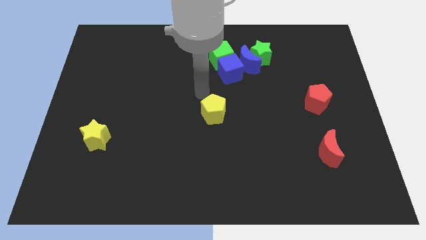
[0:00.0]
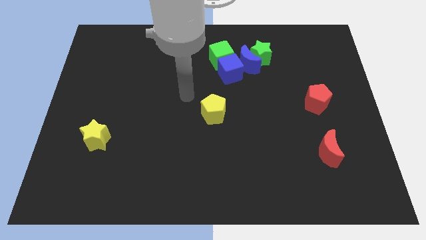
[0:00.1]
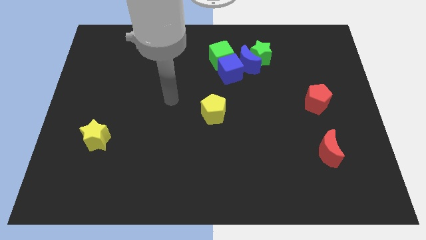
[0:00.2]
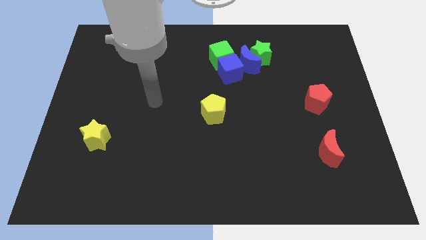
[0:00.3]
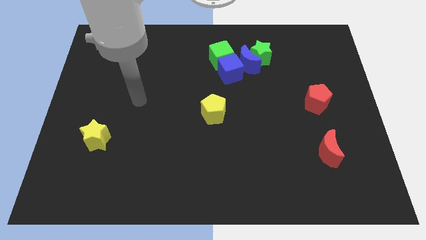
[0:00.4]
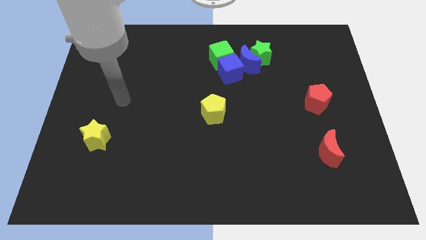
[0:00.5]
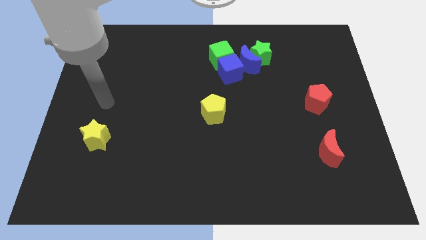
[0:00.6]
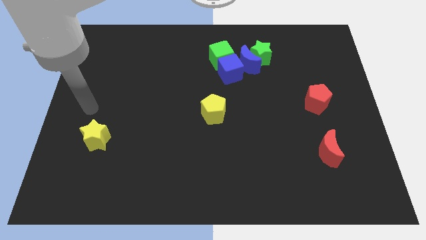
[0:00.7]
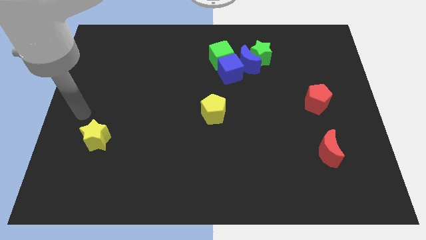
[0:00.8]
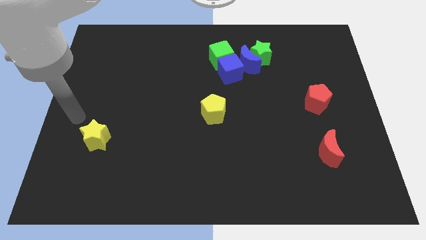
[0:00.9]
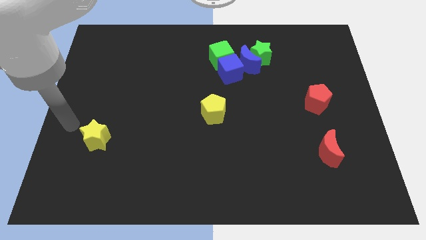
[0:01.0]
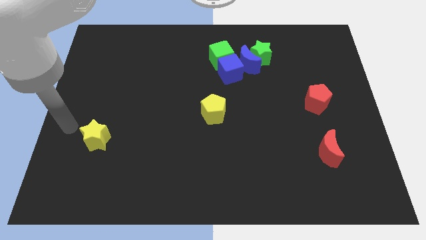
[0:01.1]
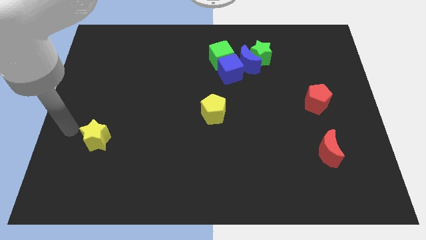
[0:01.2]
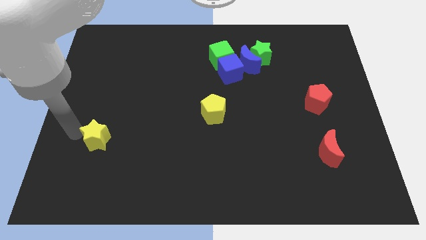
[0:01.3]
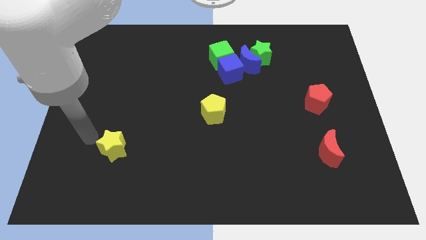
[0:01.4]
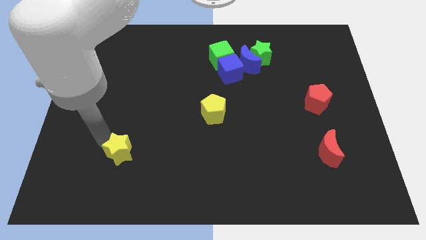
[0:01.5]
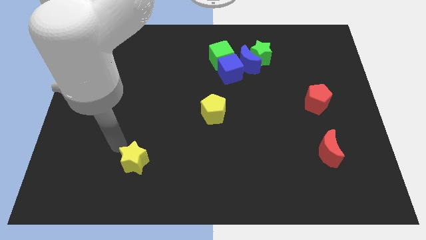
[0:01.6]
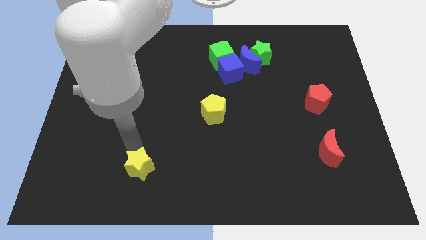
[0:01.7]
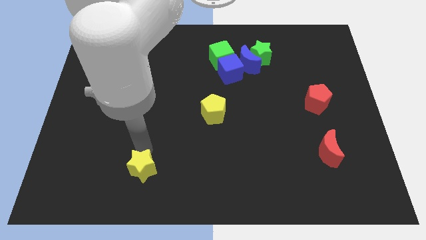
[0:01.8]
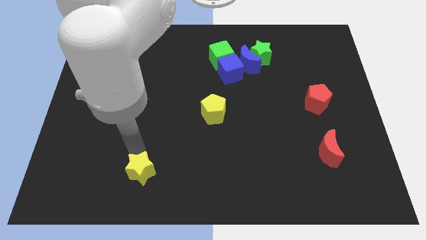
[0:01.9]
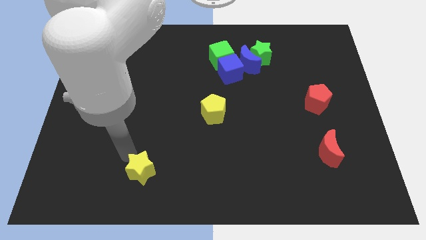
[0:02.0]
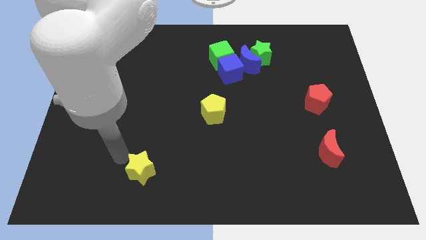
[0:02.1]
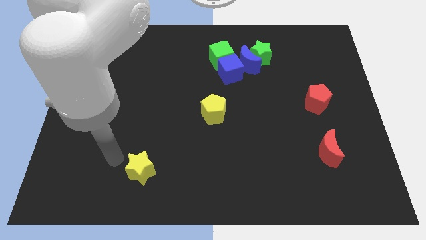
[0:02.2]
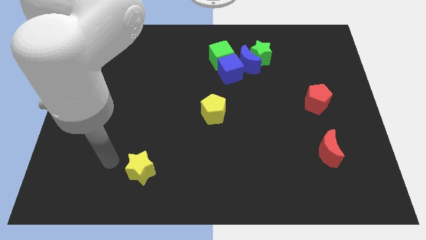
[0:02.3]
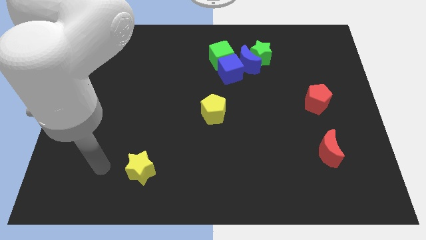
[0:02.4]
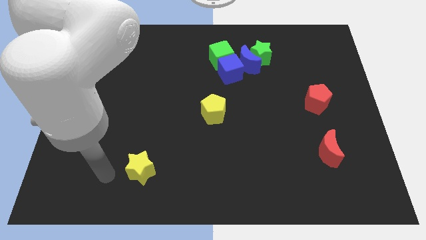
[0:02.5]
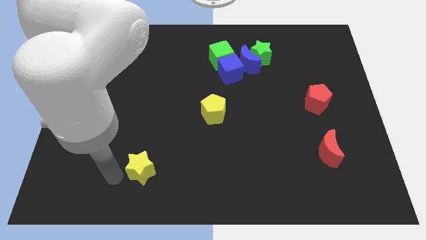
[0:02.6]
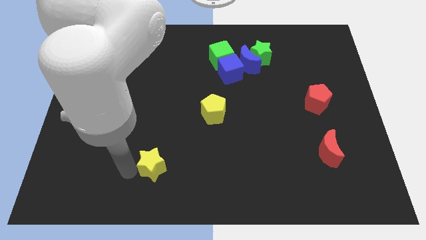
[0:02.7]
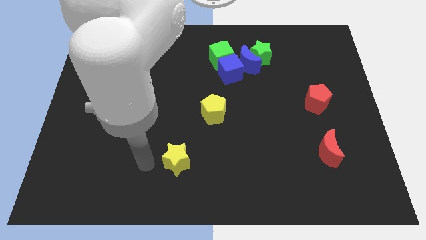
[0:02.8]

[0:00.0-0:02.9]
push the yellow star to the right of the board

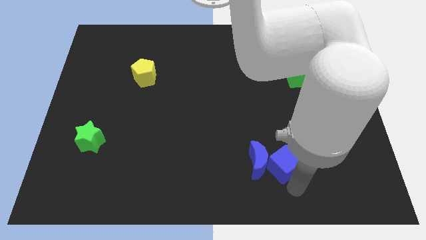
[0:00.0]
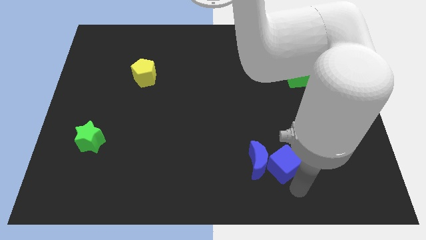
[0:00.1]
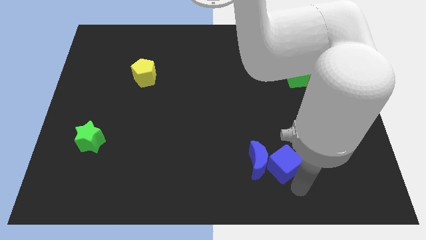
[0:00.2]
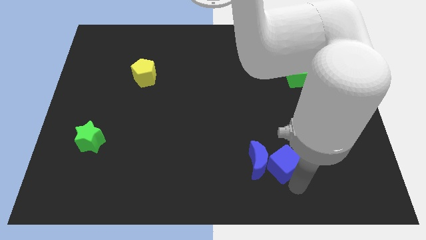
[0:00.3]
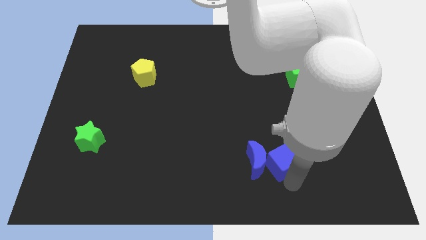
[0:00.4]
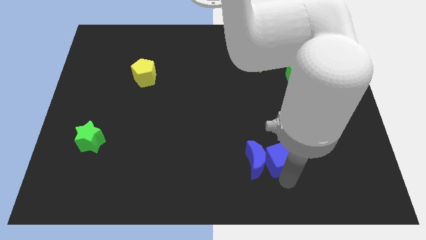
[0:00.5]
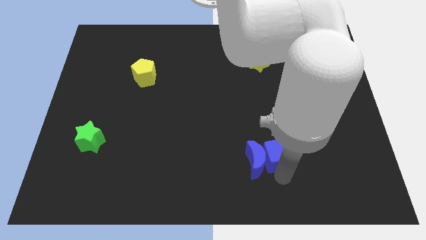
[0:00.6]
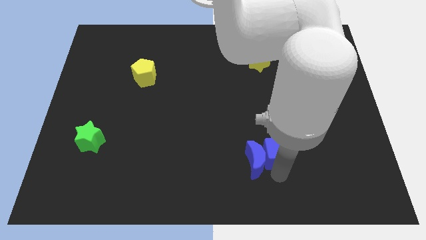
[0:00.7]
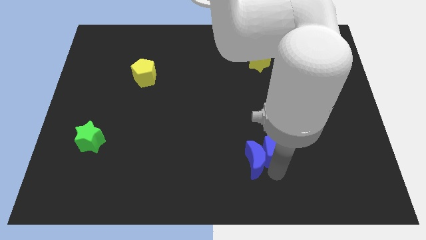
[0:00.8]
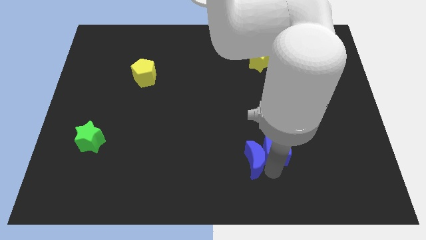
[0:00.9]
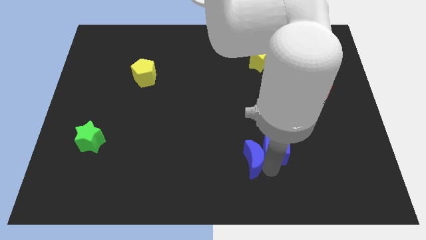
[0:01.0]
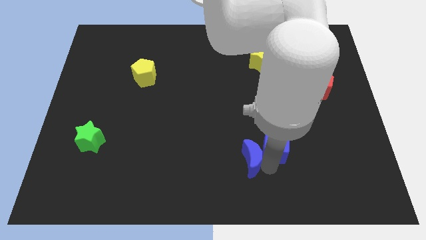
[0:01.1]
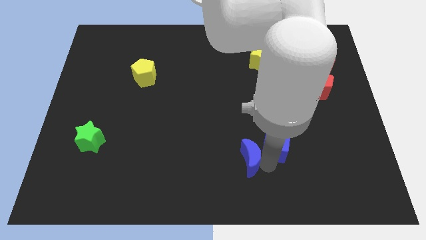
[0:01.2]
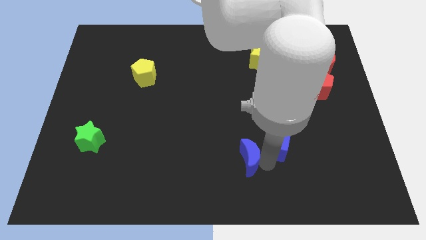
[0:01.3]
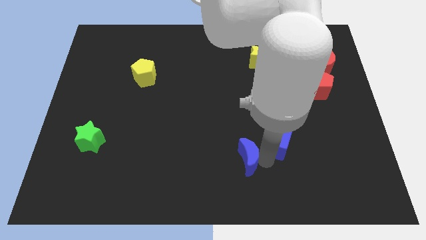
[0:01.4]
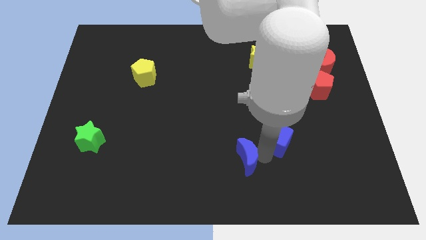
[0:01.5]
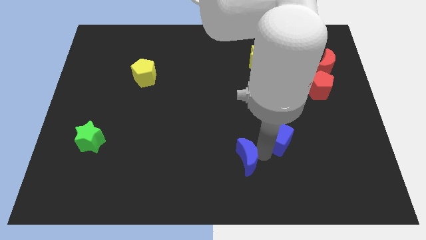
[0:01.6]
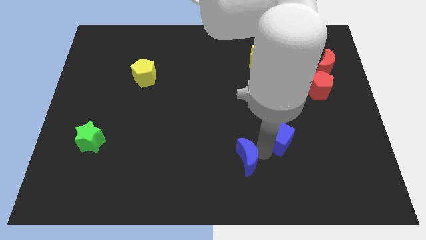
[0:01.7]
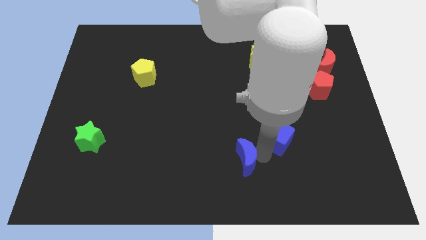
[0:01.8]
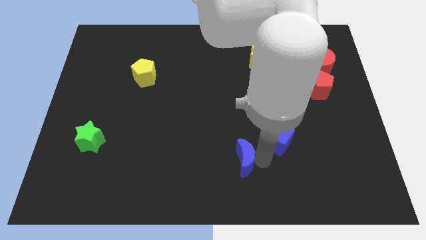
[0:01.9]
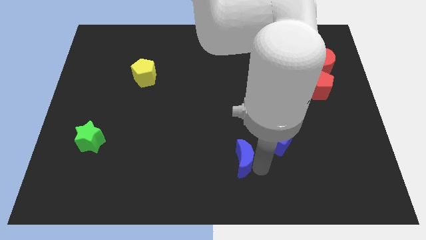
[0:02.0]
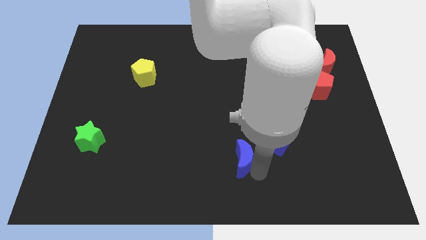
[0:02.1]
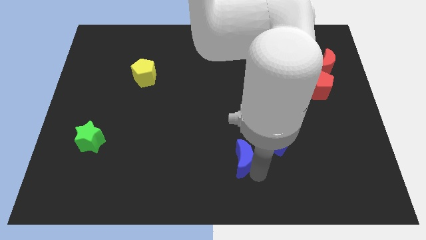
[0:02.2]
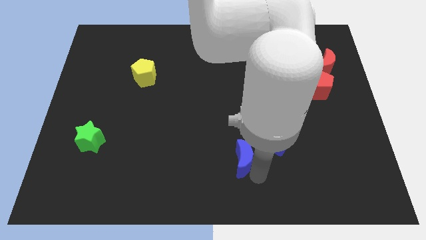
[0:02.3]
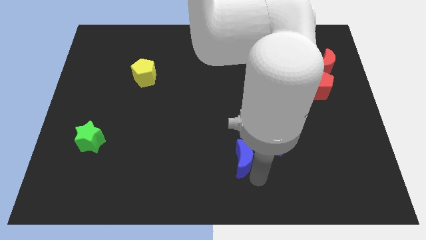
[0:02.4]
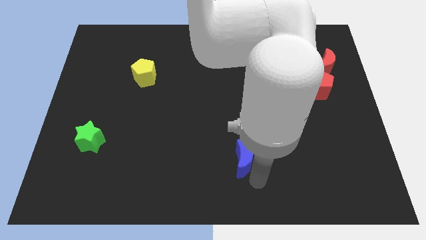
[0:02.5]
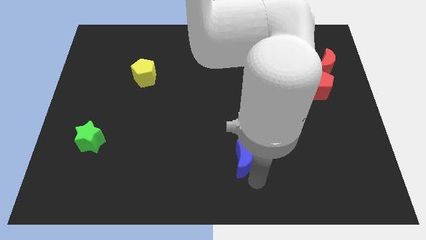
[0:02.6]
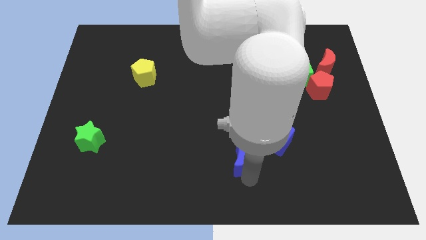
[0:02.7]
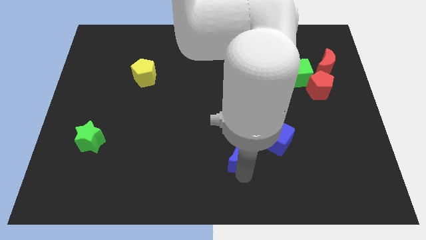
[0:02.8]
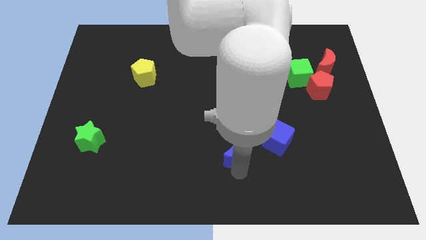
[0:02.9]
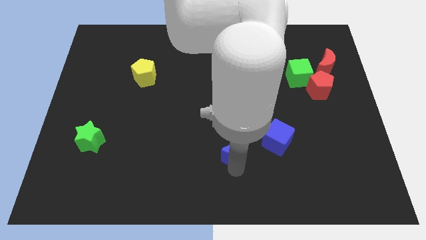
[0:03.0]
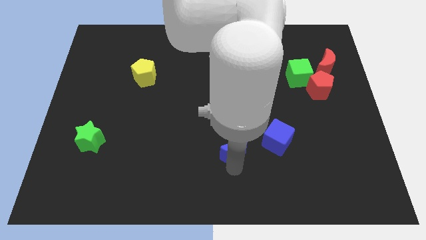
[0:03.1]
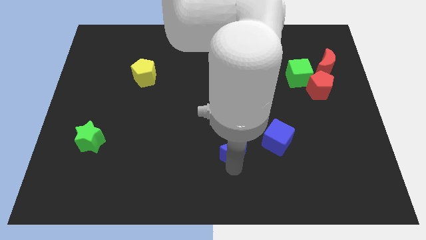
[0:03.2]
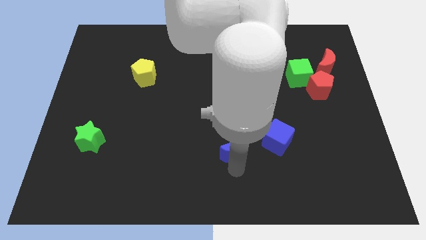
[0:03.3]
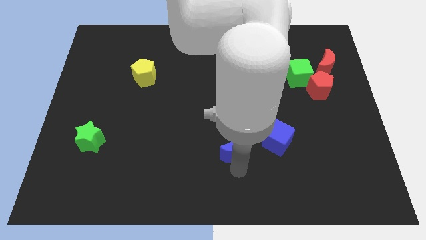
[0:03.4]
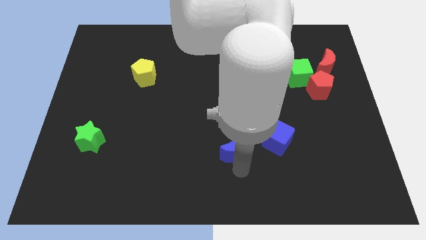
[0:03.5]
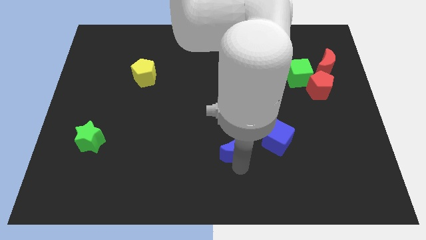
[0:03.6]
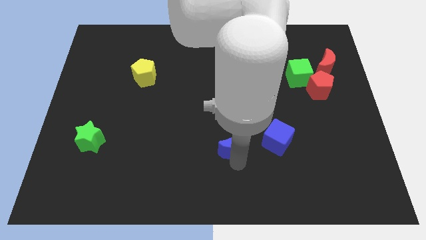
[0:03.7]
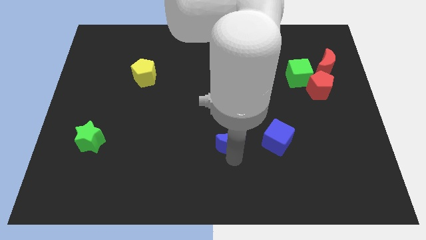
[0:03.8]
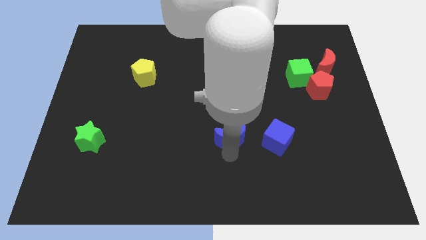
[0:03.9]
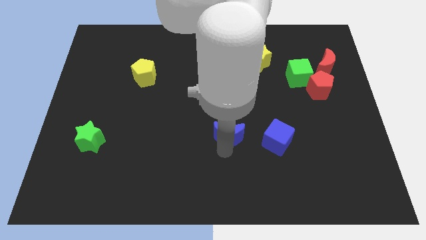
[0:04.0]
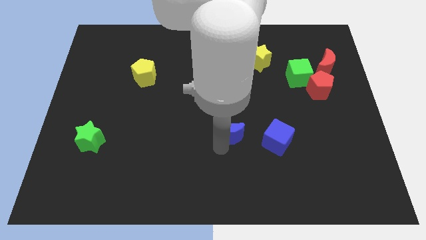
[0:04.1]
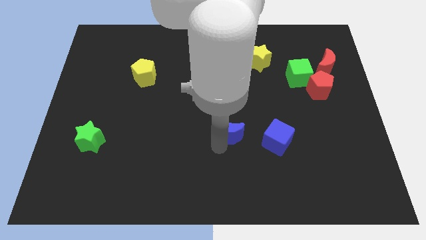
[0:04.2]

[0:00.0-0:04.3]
move the blue moon to the left of the blue cube

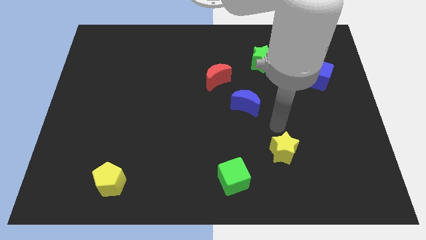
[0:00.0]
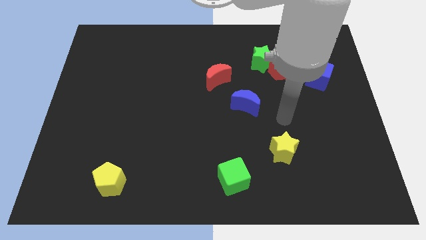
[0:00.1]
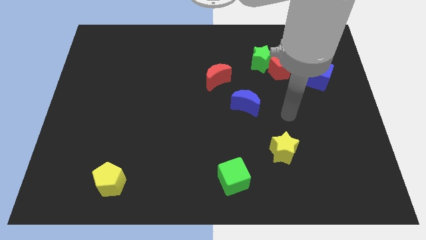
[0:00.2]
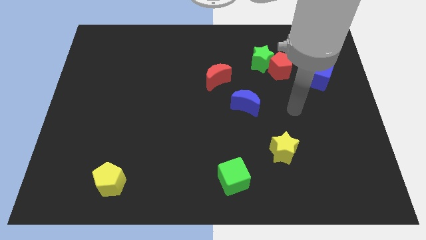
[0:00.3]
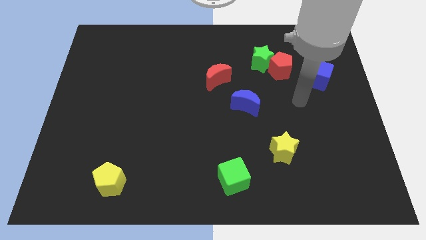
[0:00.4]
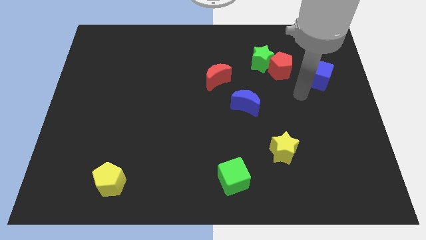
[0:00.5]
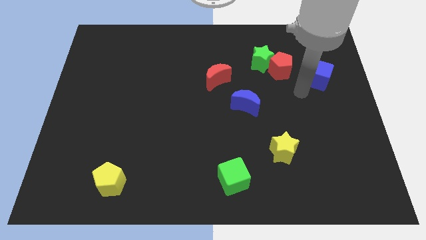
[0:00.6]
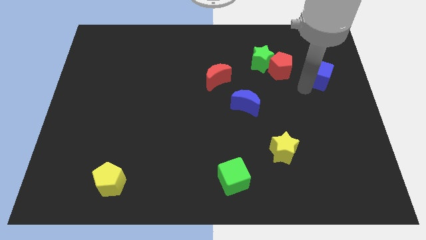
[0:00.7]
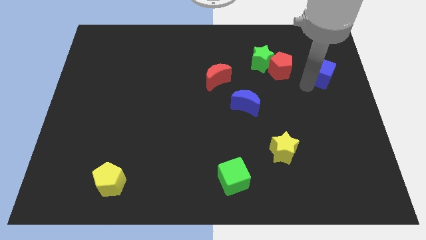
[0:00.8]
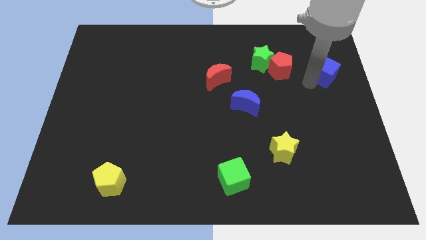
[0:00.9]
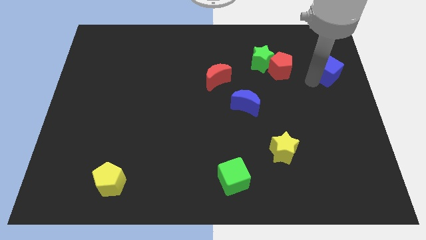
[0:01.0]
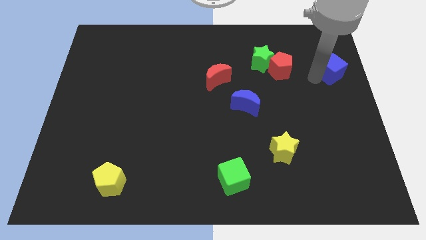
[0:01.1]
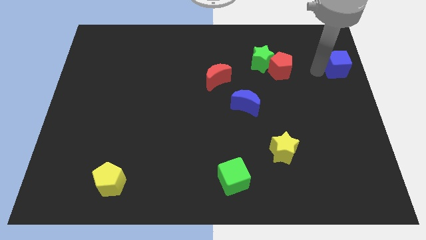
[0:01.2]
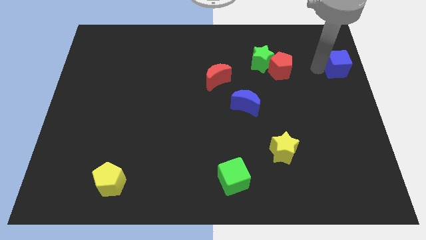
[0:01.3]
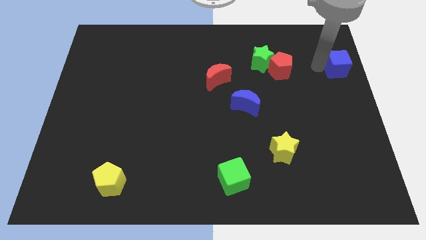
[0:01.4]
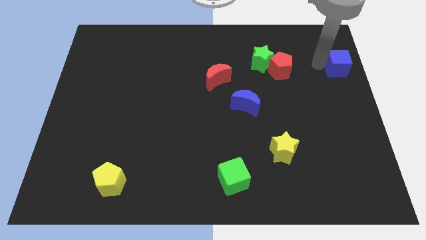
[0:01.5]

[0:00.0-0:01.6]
slide the blue cube slightly to the right

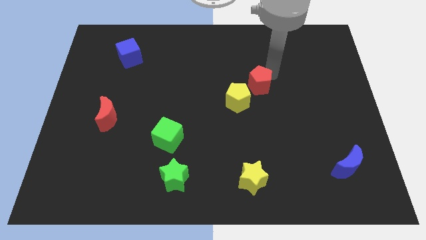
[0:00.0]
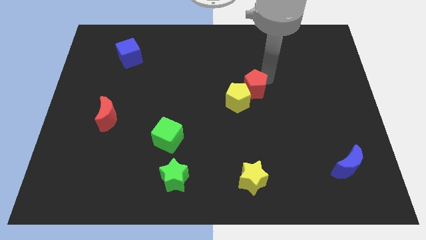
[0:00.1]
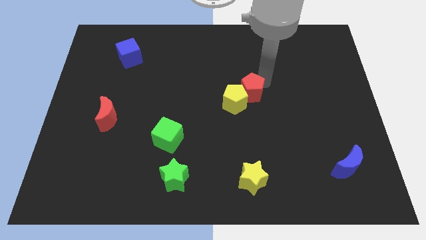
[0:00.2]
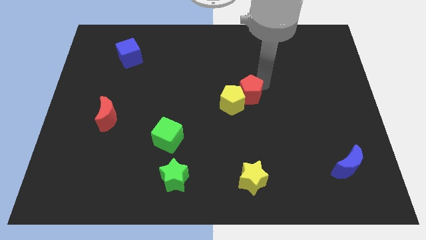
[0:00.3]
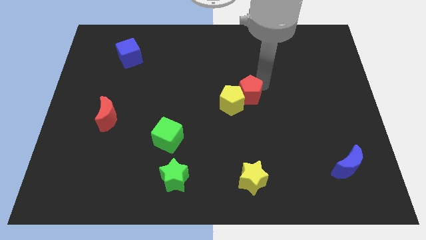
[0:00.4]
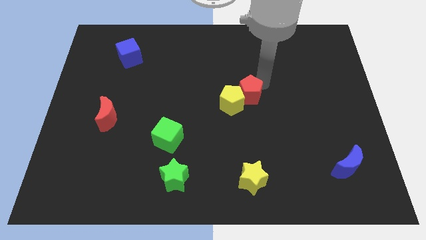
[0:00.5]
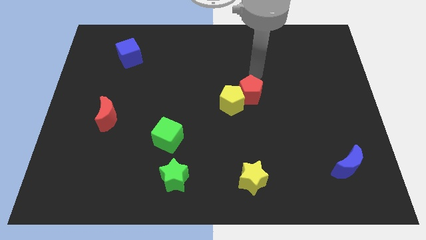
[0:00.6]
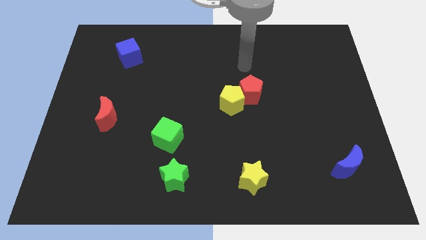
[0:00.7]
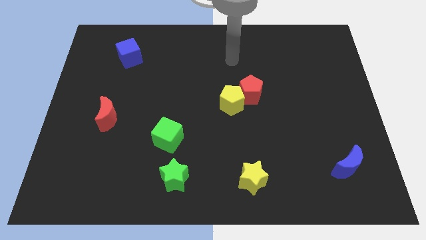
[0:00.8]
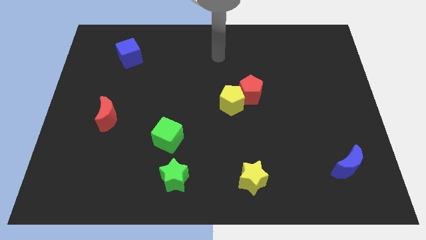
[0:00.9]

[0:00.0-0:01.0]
push the red pentagon towards the top right of yellow pentagon
